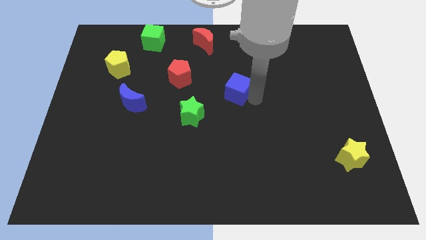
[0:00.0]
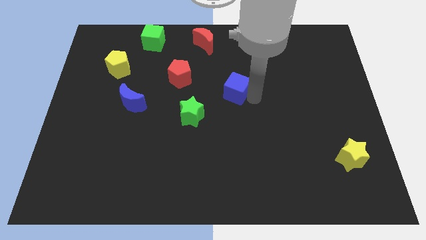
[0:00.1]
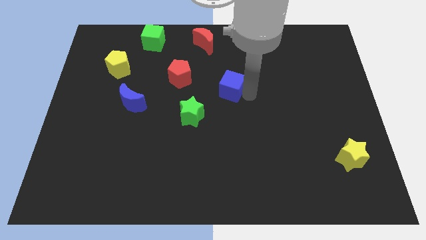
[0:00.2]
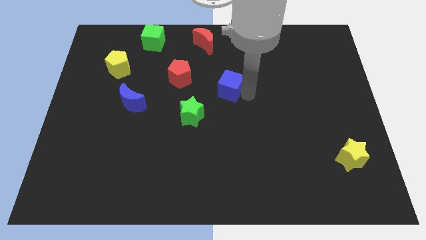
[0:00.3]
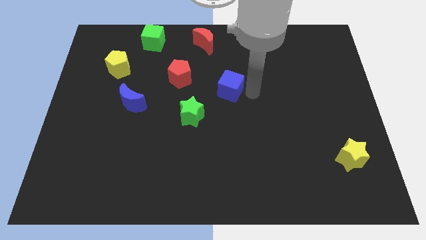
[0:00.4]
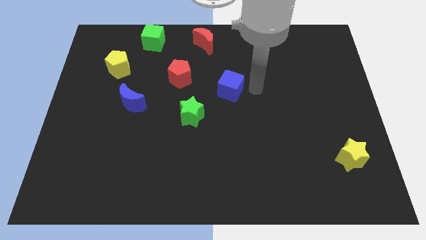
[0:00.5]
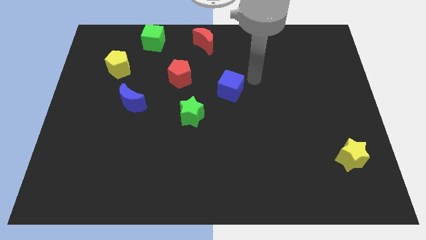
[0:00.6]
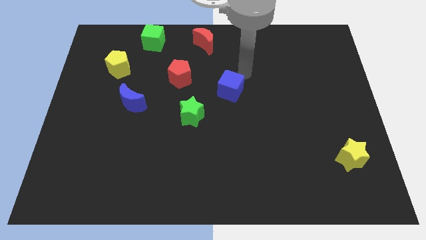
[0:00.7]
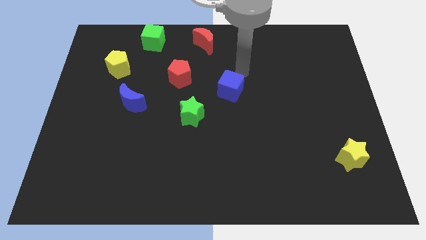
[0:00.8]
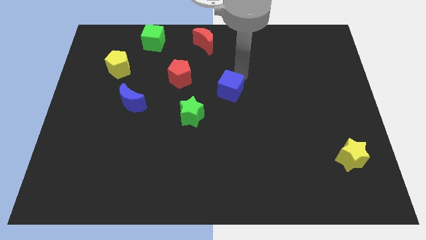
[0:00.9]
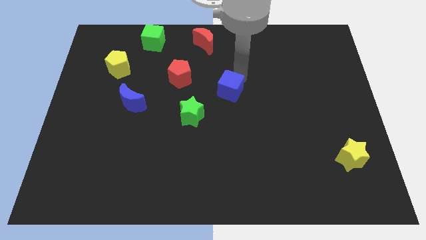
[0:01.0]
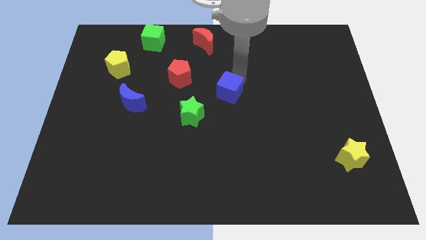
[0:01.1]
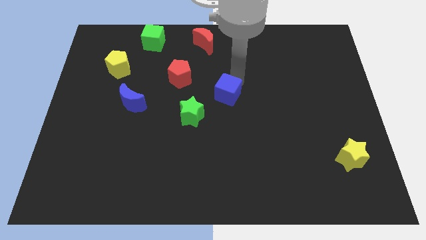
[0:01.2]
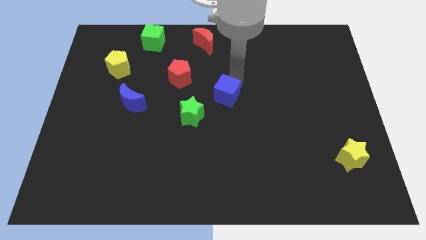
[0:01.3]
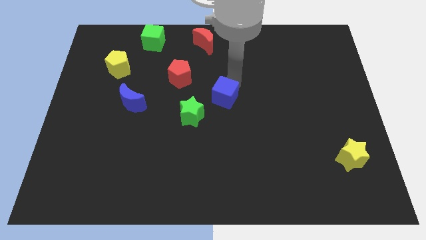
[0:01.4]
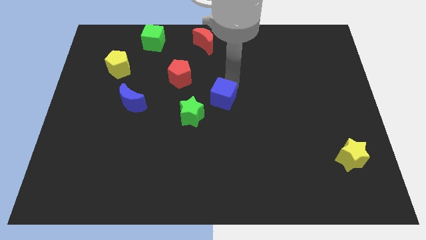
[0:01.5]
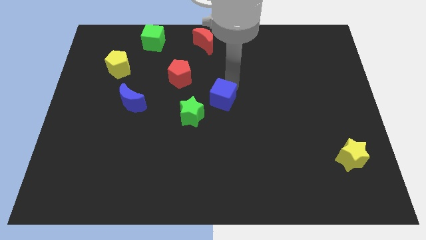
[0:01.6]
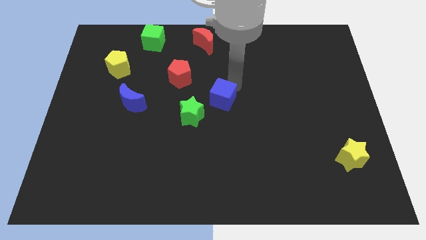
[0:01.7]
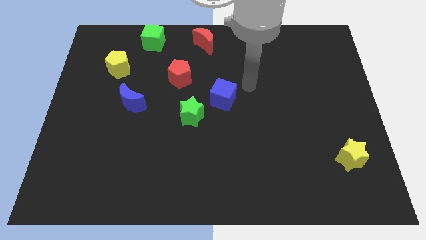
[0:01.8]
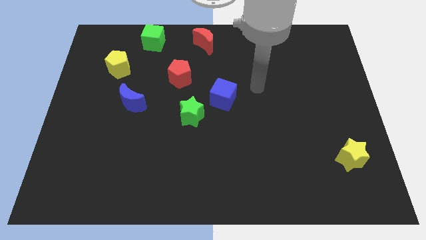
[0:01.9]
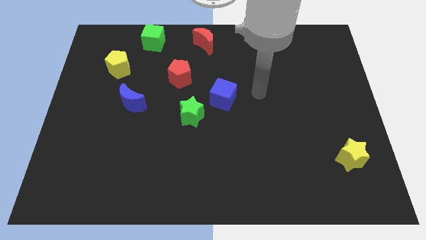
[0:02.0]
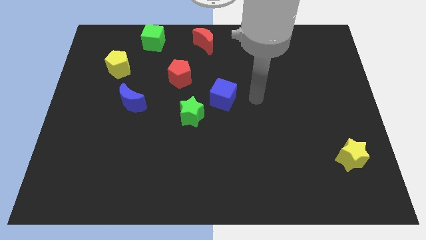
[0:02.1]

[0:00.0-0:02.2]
move the blue cube towards the green star

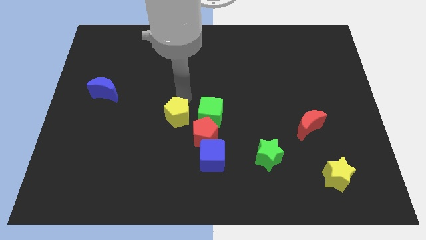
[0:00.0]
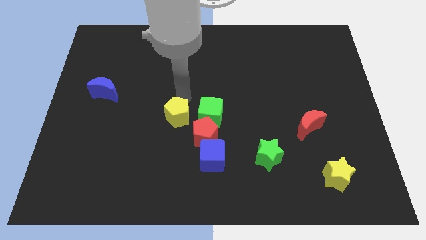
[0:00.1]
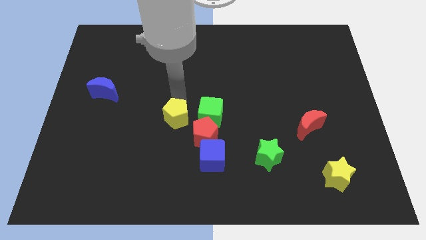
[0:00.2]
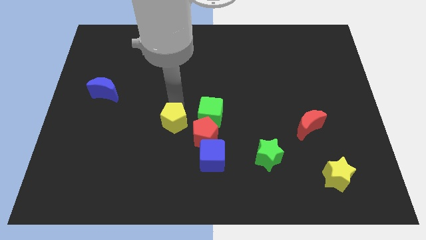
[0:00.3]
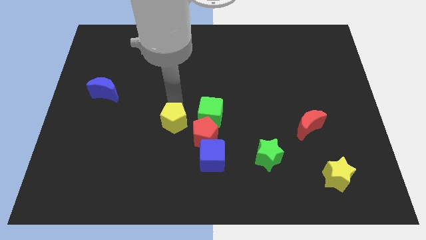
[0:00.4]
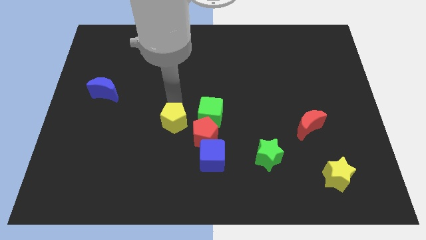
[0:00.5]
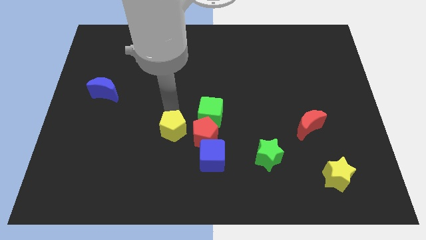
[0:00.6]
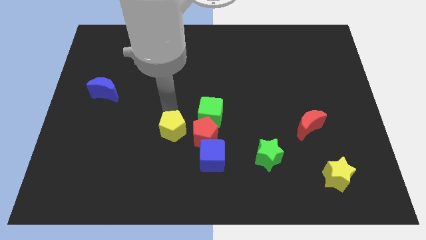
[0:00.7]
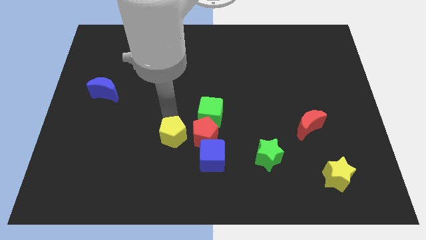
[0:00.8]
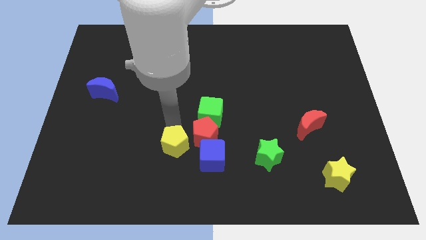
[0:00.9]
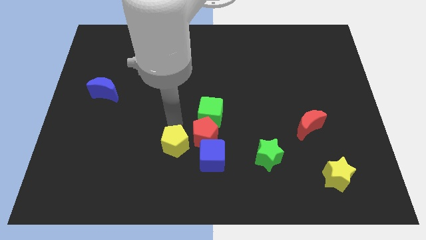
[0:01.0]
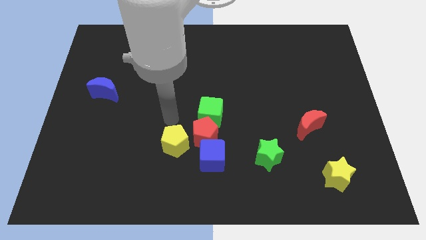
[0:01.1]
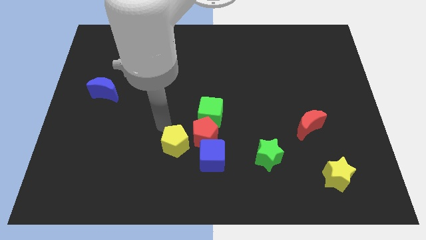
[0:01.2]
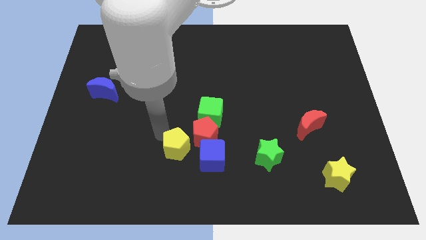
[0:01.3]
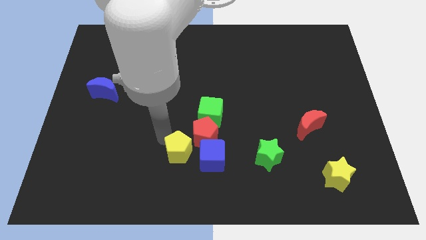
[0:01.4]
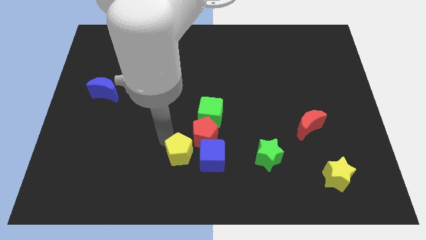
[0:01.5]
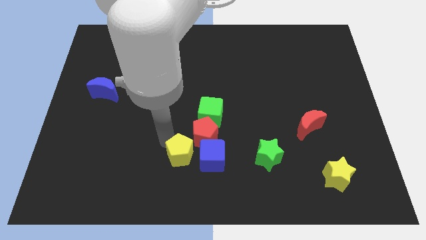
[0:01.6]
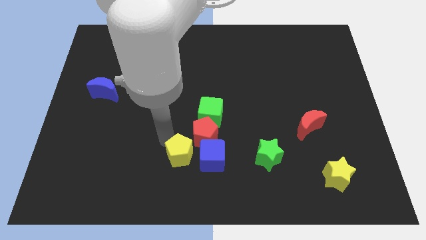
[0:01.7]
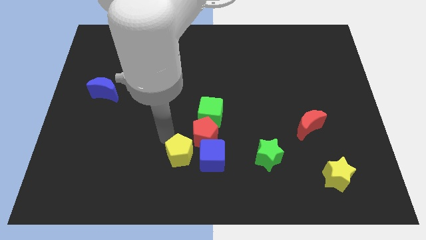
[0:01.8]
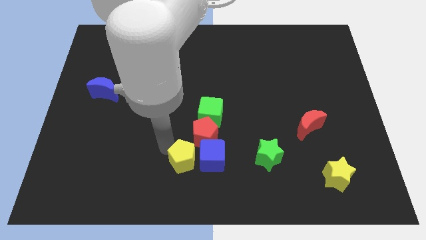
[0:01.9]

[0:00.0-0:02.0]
push yellow pentagon to the left side of the blue cube

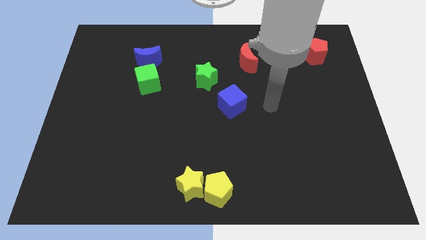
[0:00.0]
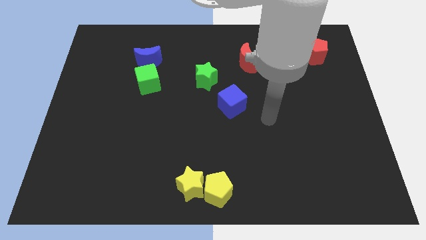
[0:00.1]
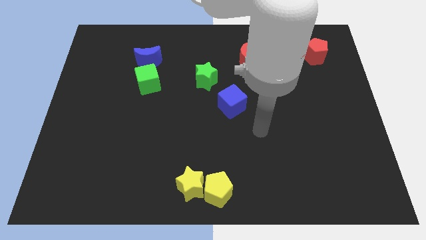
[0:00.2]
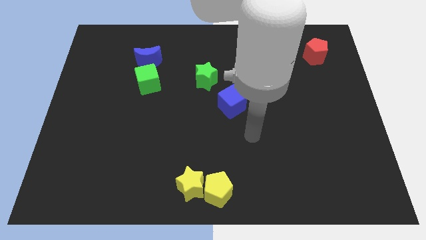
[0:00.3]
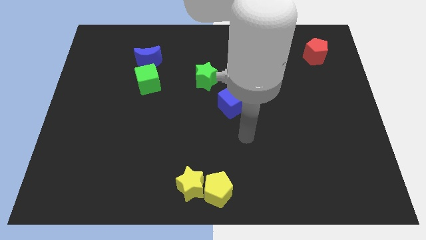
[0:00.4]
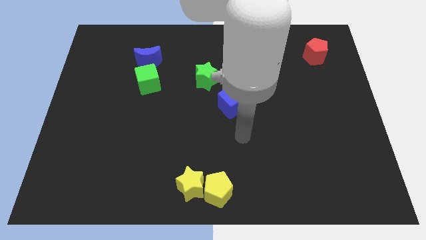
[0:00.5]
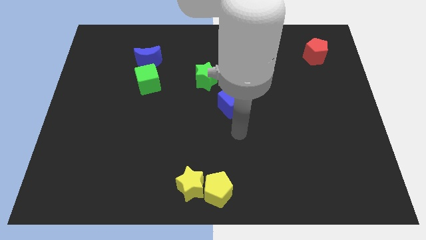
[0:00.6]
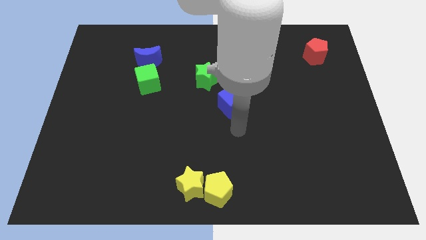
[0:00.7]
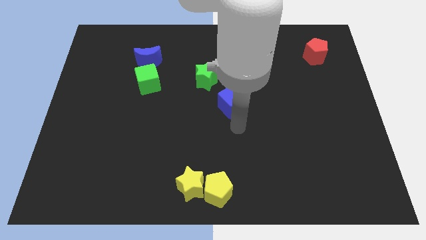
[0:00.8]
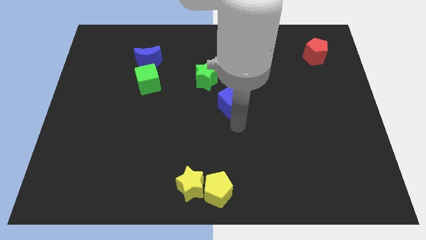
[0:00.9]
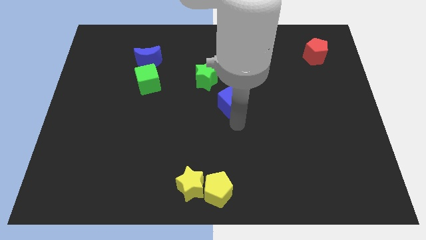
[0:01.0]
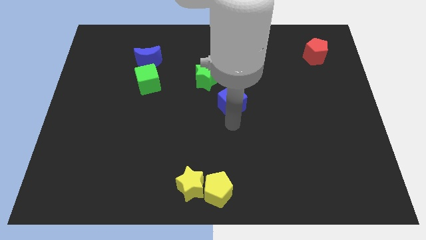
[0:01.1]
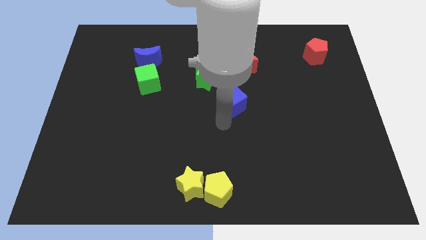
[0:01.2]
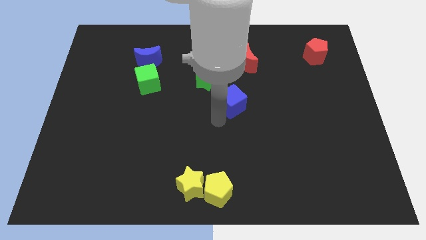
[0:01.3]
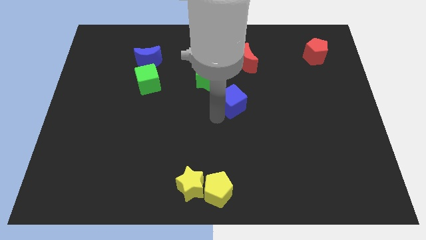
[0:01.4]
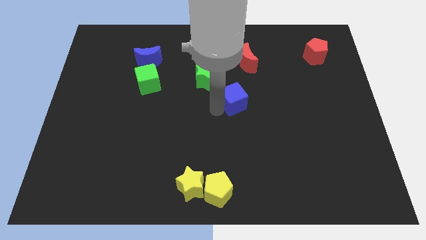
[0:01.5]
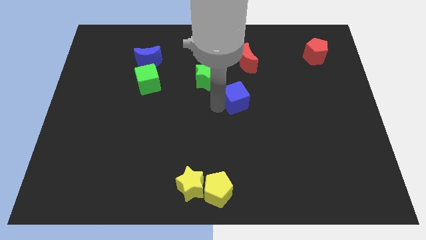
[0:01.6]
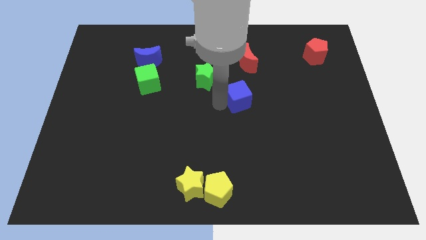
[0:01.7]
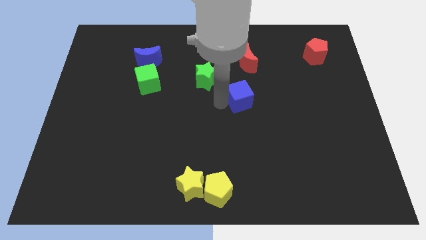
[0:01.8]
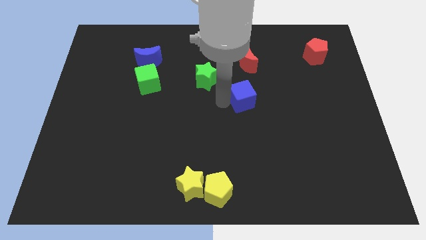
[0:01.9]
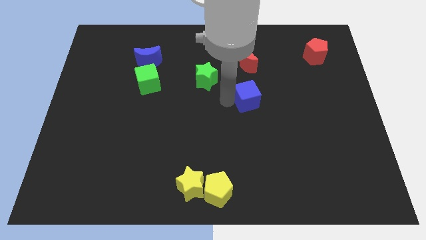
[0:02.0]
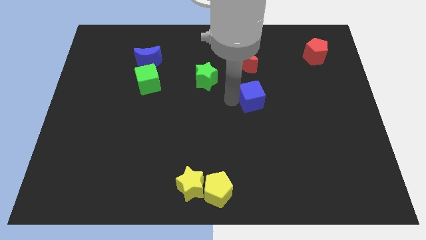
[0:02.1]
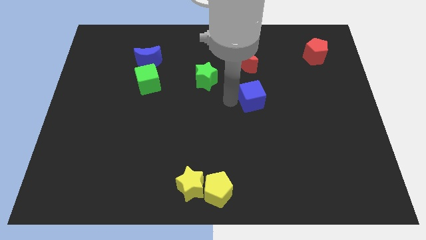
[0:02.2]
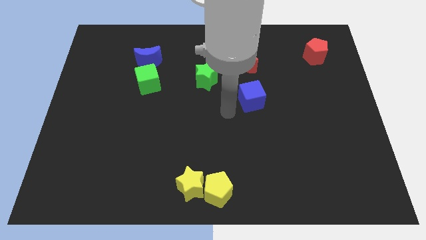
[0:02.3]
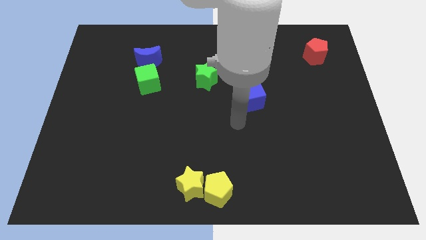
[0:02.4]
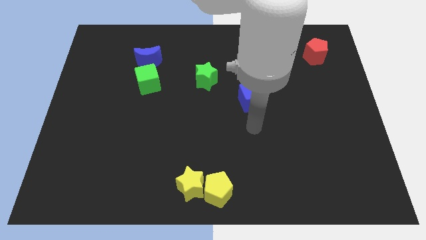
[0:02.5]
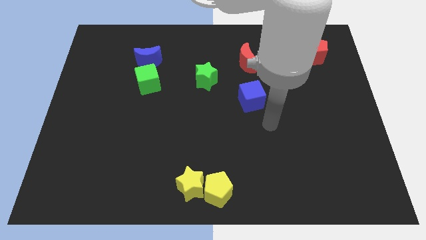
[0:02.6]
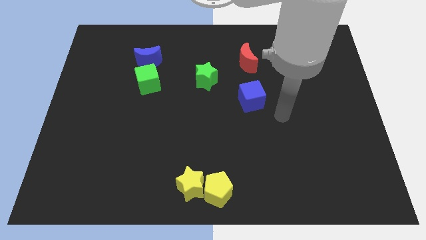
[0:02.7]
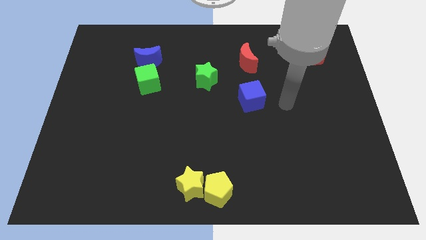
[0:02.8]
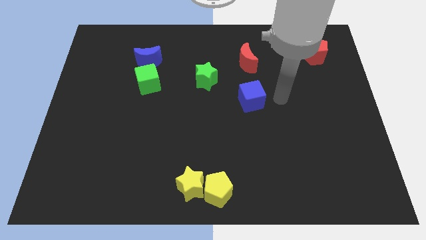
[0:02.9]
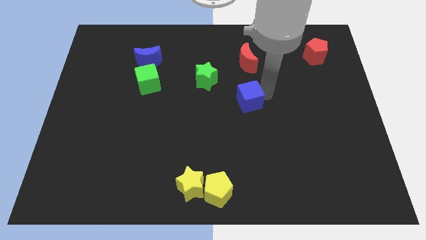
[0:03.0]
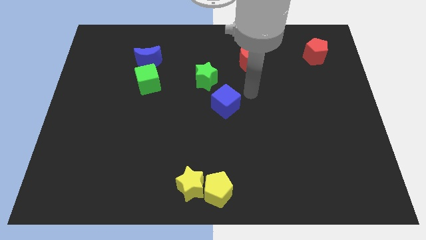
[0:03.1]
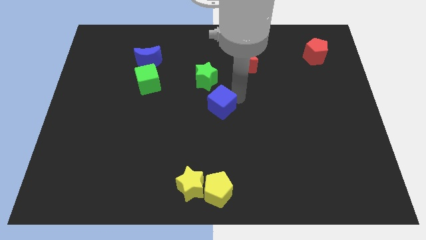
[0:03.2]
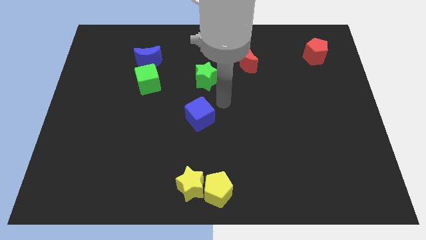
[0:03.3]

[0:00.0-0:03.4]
move the blue cube slightly towards the left side

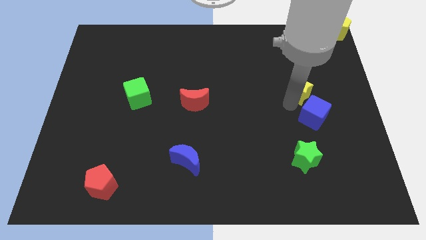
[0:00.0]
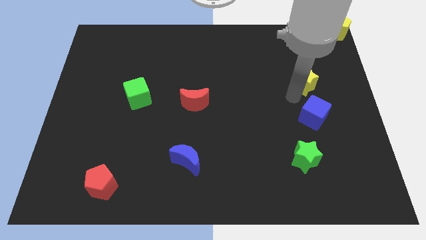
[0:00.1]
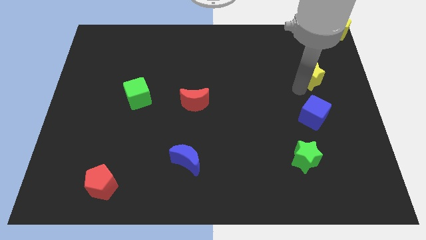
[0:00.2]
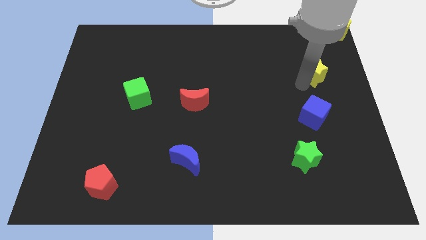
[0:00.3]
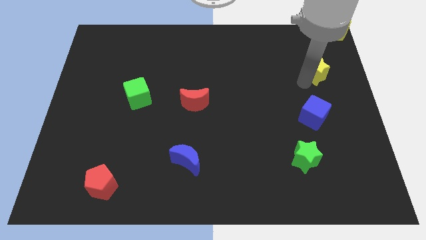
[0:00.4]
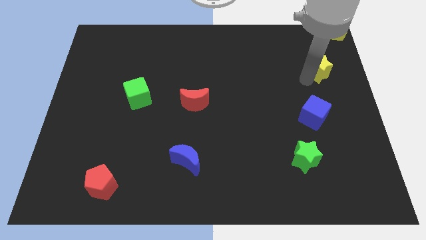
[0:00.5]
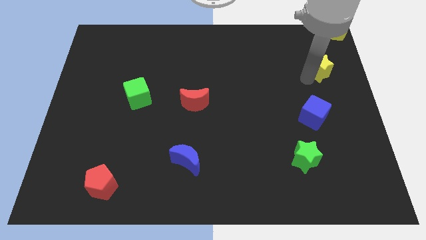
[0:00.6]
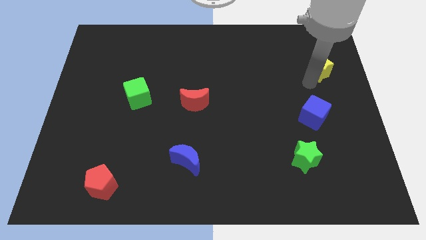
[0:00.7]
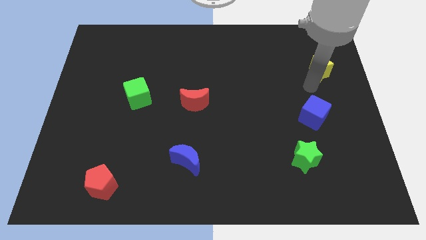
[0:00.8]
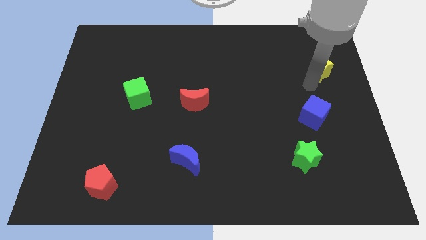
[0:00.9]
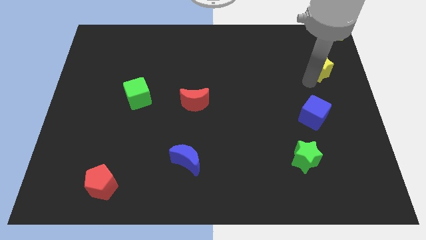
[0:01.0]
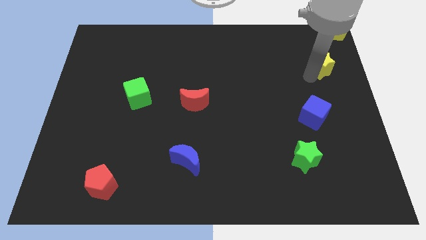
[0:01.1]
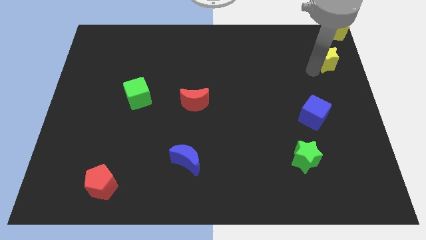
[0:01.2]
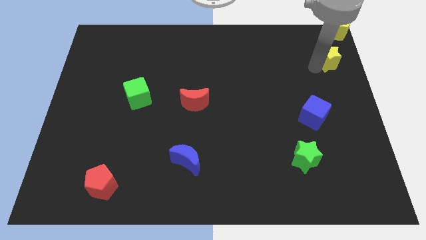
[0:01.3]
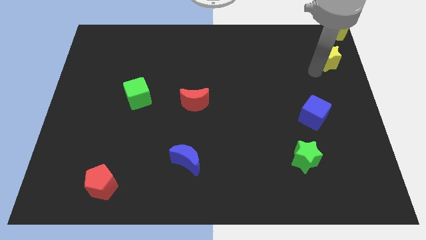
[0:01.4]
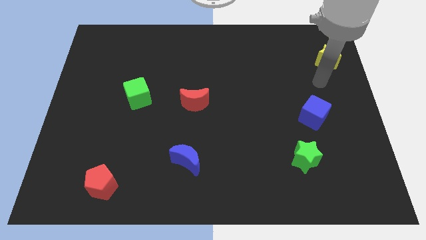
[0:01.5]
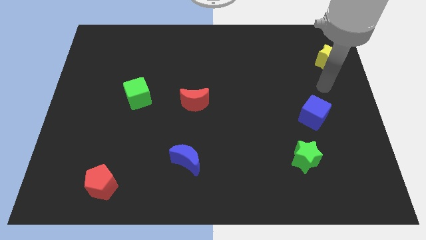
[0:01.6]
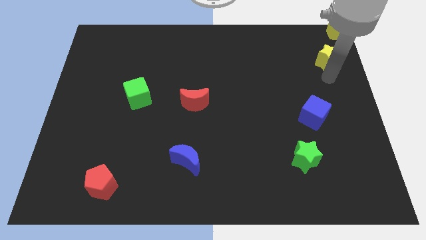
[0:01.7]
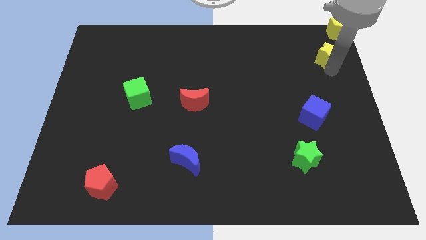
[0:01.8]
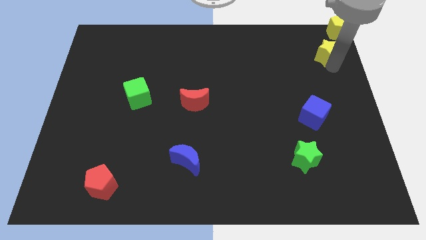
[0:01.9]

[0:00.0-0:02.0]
push the yellow star towards the yellow pentagon
